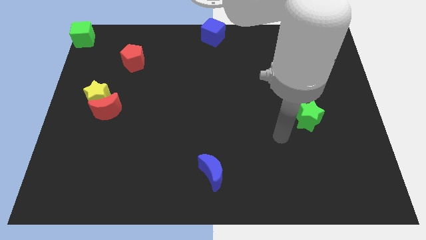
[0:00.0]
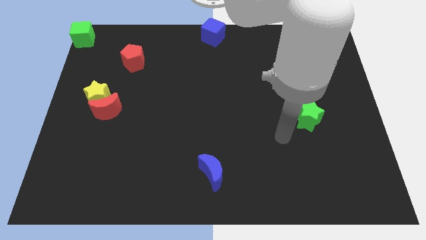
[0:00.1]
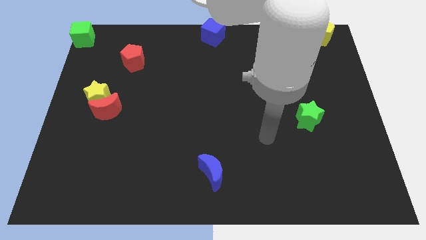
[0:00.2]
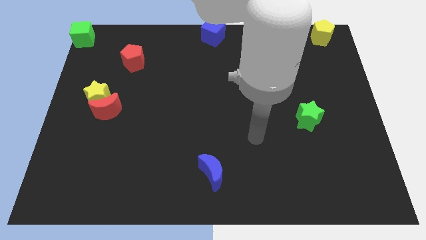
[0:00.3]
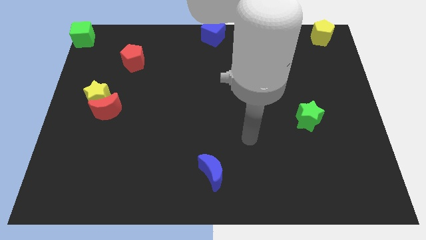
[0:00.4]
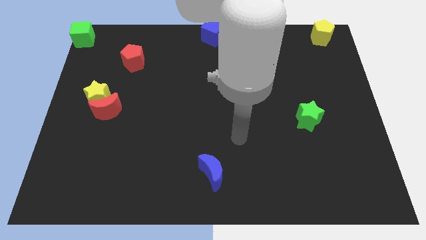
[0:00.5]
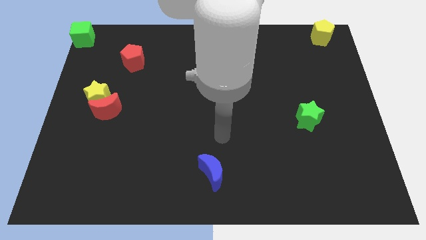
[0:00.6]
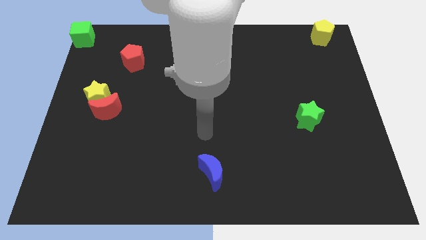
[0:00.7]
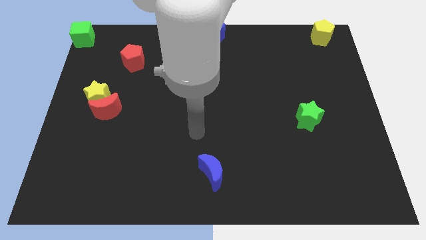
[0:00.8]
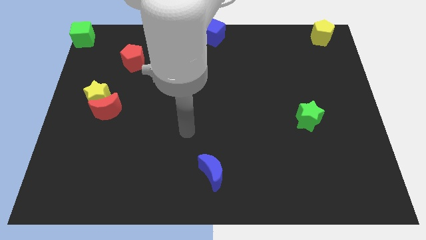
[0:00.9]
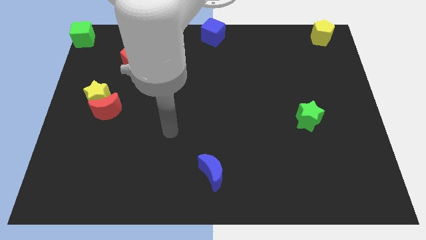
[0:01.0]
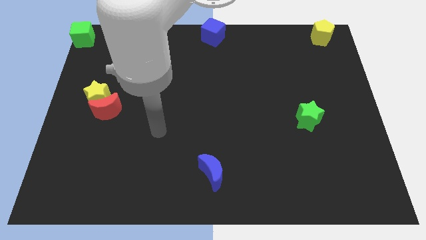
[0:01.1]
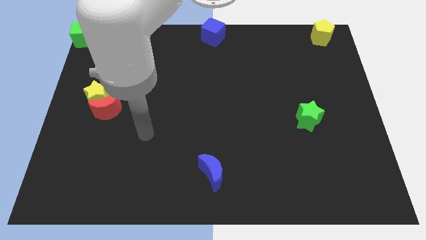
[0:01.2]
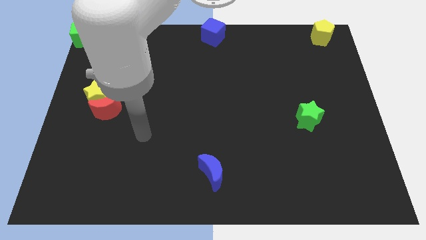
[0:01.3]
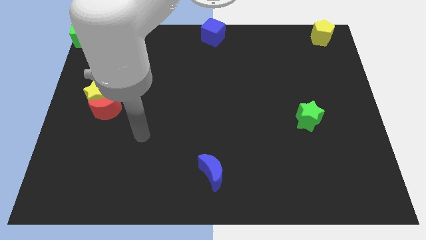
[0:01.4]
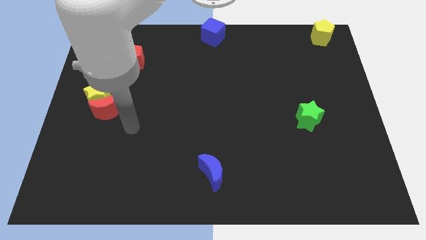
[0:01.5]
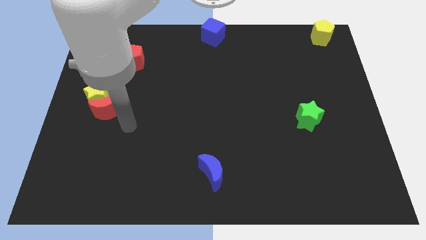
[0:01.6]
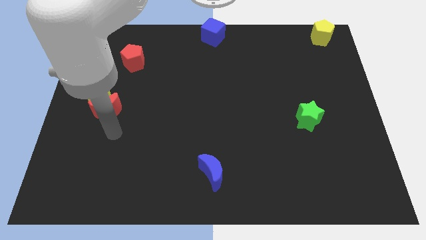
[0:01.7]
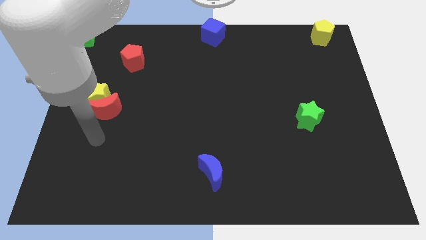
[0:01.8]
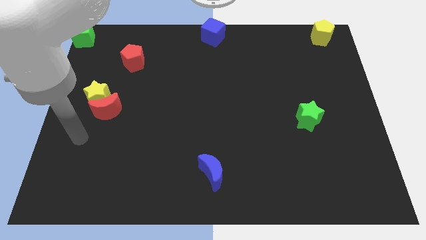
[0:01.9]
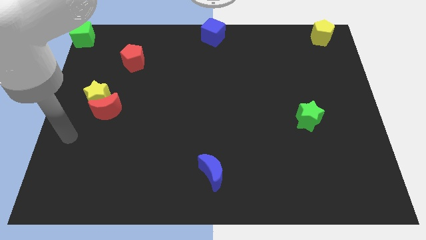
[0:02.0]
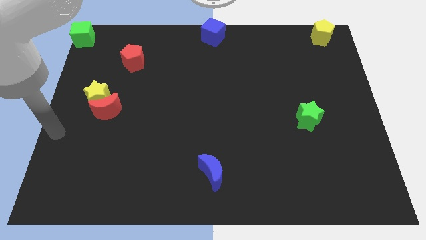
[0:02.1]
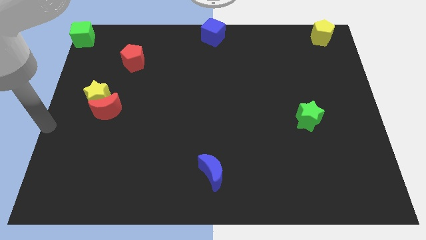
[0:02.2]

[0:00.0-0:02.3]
move your arm away from the green star

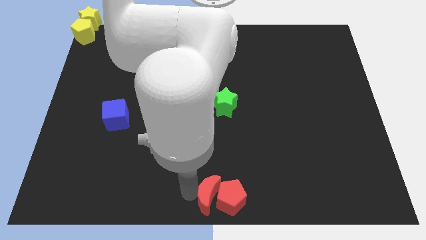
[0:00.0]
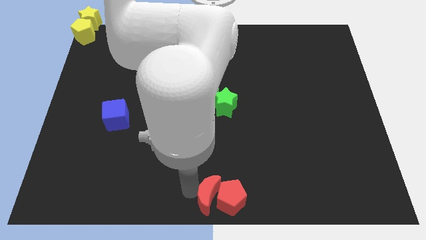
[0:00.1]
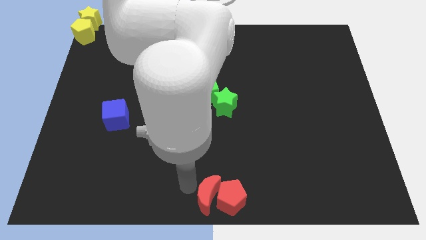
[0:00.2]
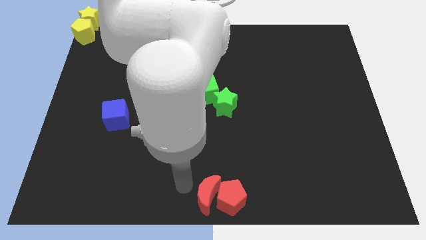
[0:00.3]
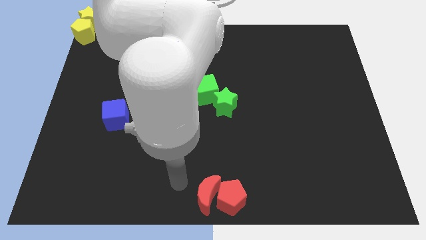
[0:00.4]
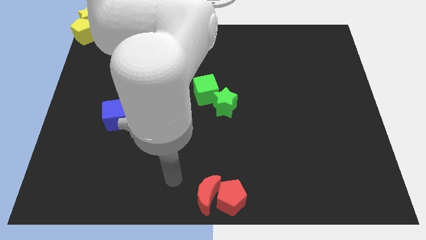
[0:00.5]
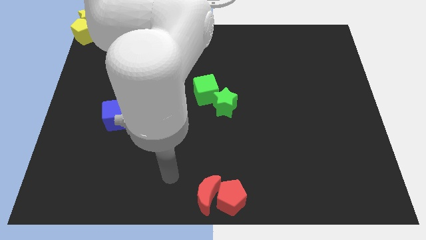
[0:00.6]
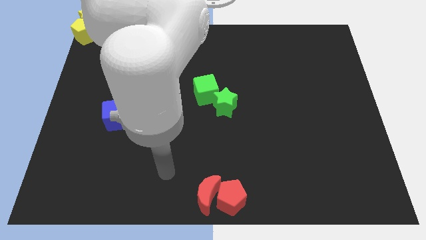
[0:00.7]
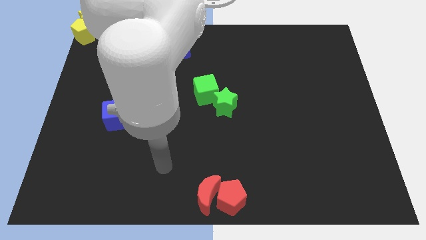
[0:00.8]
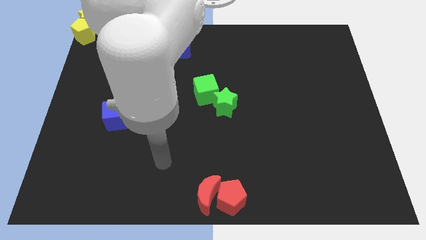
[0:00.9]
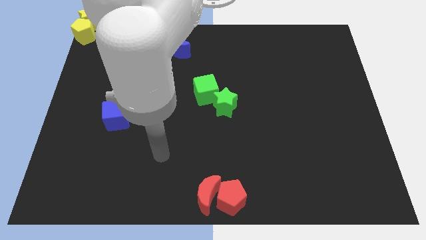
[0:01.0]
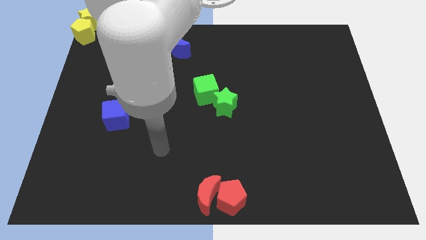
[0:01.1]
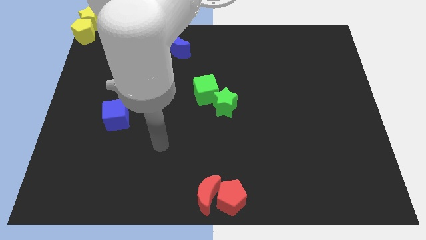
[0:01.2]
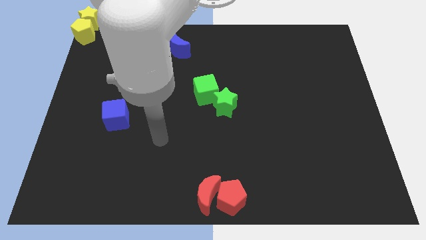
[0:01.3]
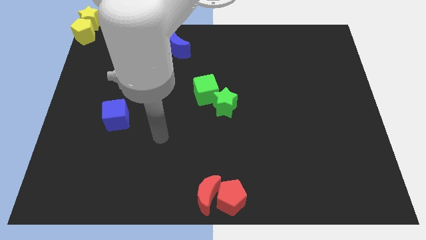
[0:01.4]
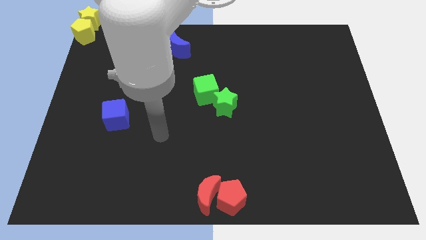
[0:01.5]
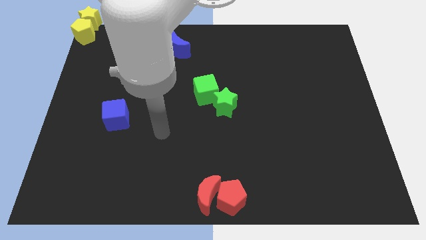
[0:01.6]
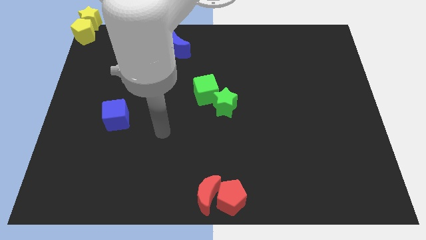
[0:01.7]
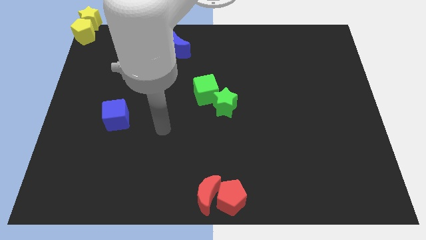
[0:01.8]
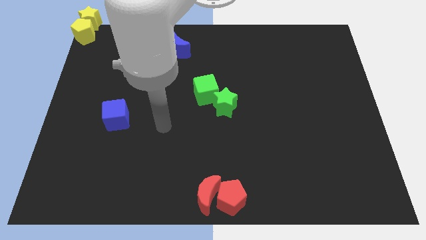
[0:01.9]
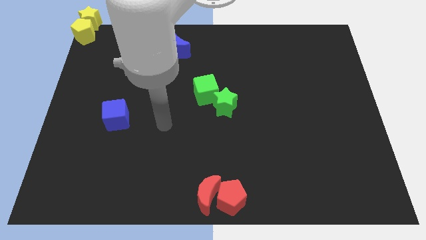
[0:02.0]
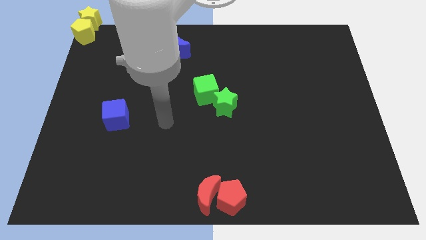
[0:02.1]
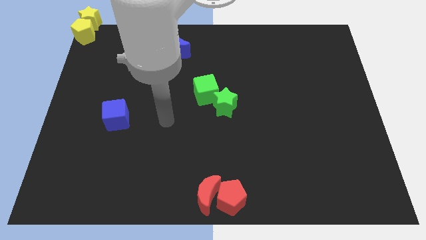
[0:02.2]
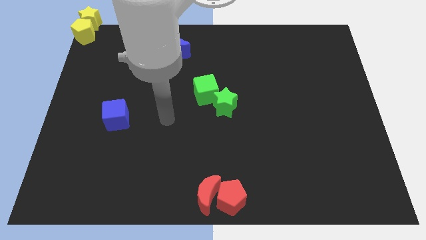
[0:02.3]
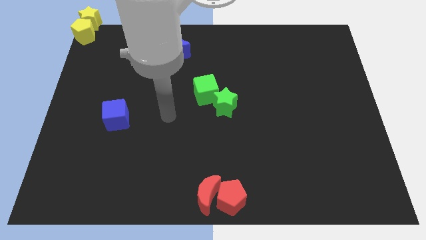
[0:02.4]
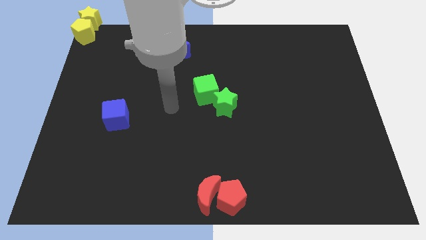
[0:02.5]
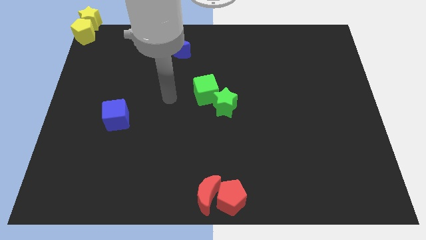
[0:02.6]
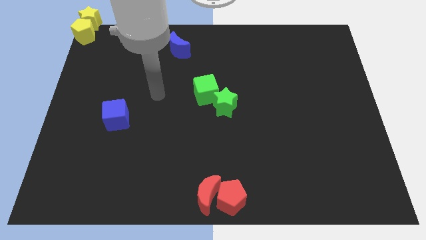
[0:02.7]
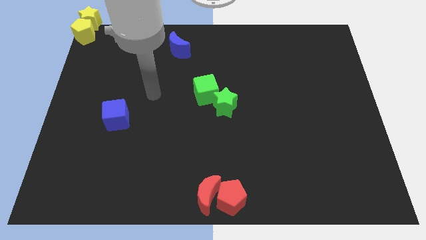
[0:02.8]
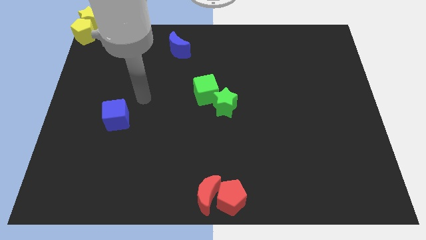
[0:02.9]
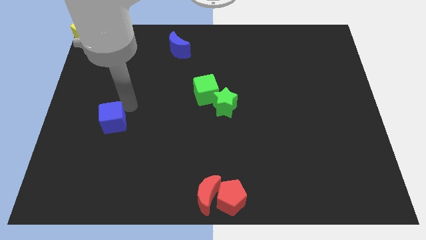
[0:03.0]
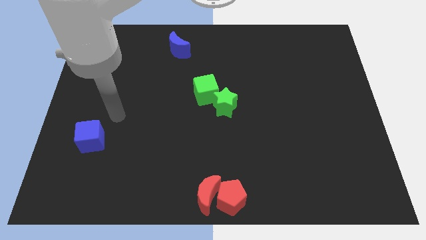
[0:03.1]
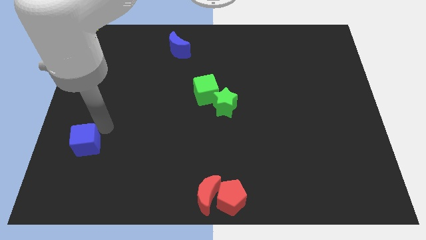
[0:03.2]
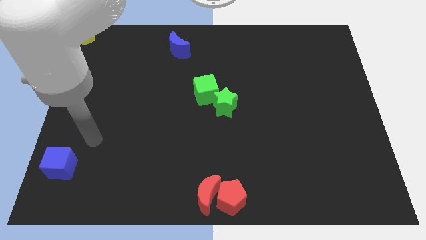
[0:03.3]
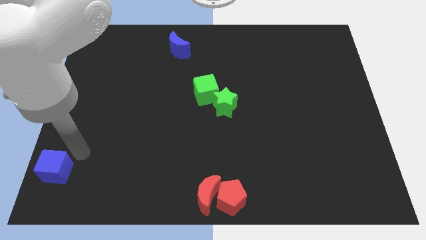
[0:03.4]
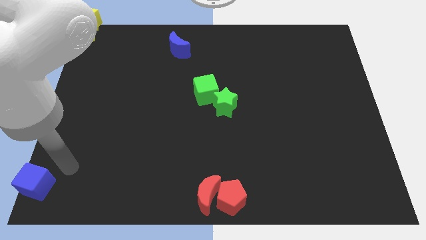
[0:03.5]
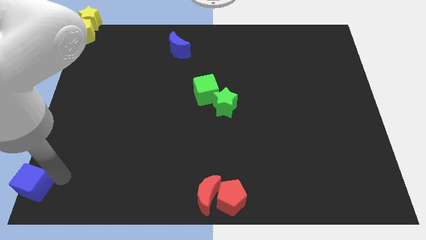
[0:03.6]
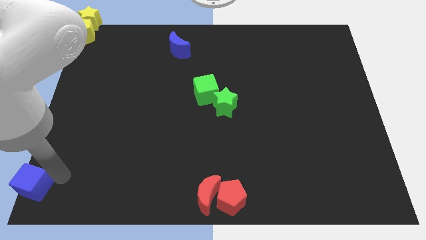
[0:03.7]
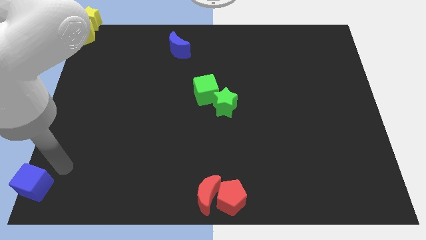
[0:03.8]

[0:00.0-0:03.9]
push the blue cube to the bottom left to the board

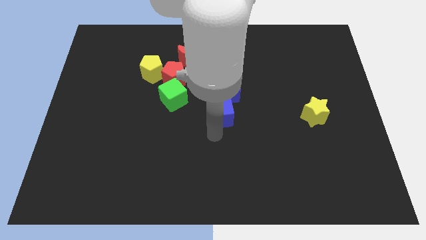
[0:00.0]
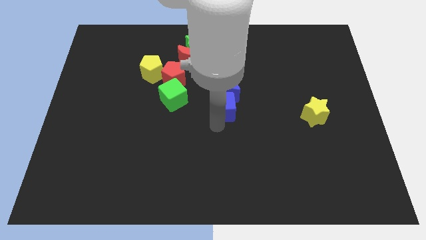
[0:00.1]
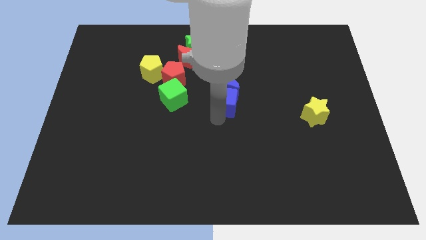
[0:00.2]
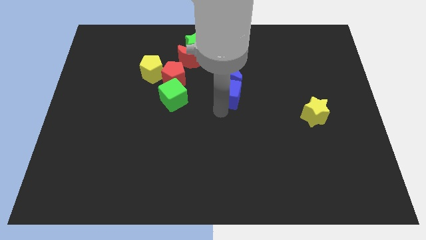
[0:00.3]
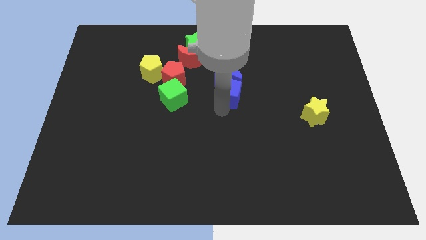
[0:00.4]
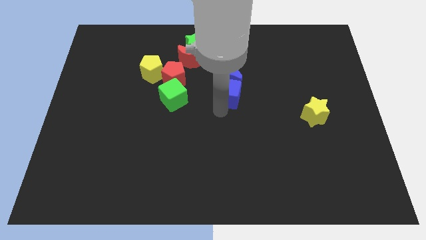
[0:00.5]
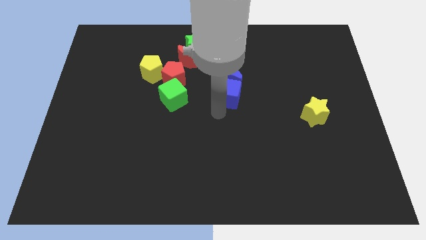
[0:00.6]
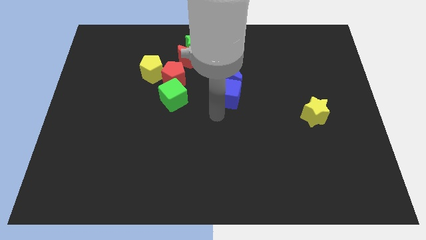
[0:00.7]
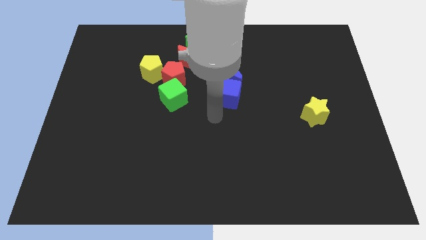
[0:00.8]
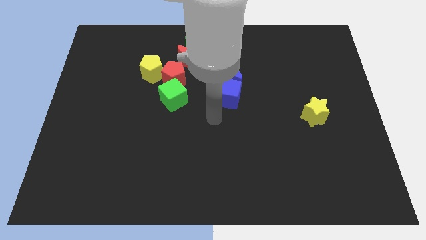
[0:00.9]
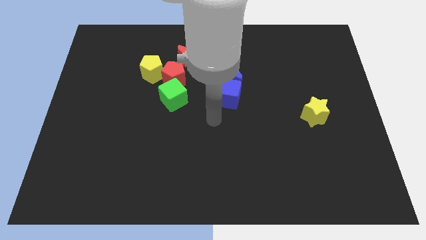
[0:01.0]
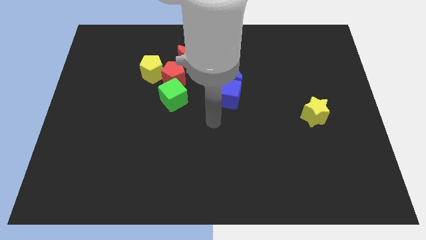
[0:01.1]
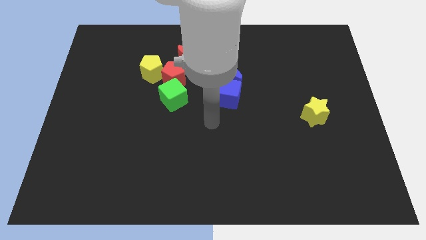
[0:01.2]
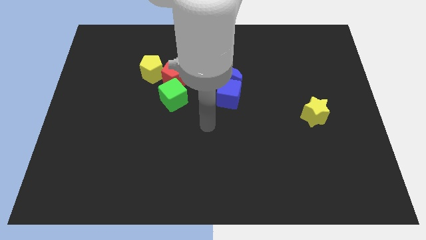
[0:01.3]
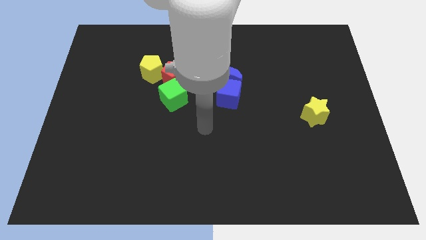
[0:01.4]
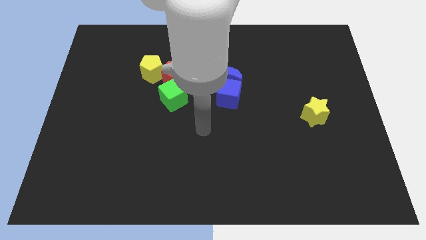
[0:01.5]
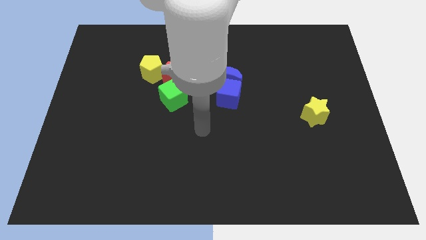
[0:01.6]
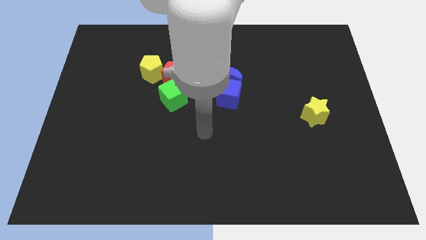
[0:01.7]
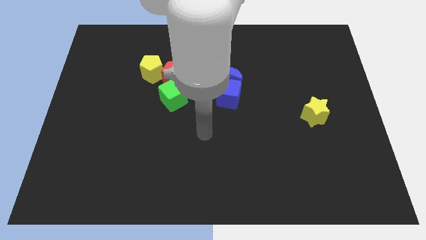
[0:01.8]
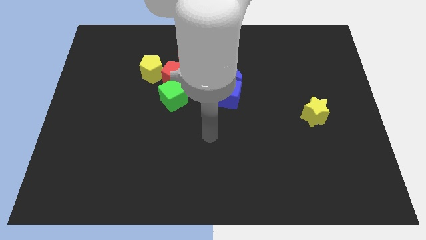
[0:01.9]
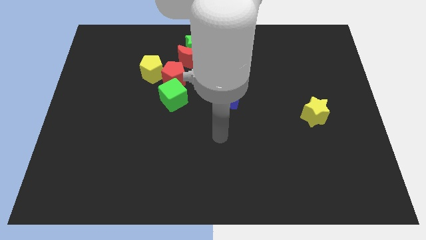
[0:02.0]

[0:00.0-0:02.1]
move your arm to the bottom of the blue cube

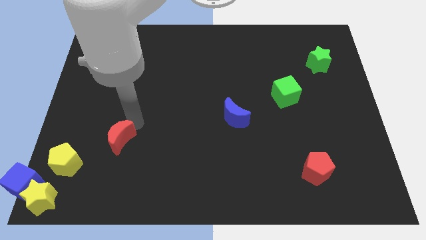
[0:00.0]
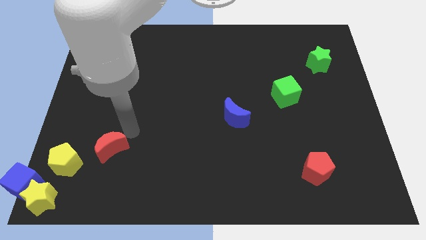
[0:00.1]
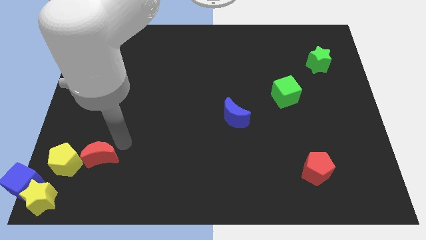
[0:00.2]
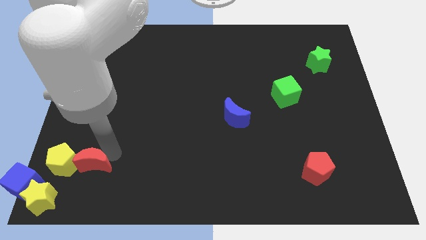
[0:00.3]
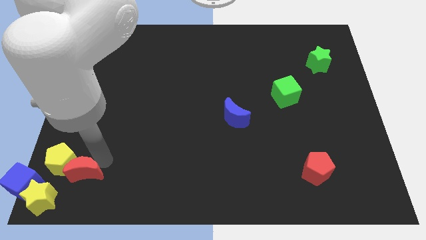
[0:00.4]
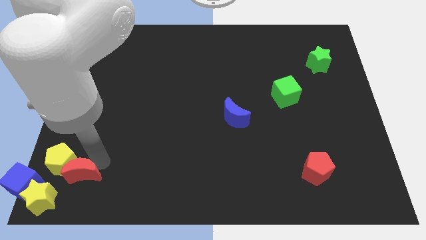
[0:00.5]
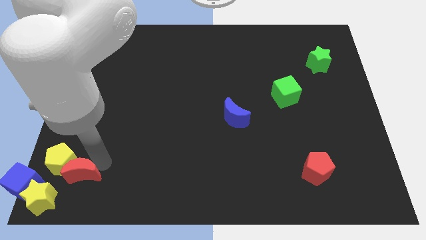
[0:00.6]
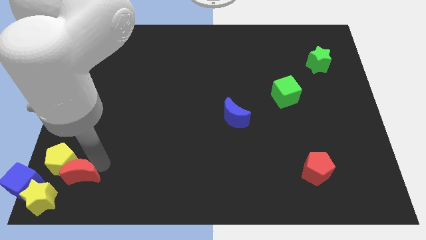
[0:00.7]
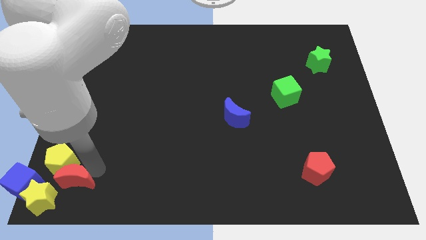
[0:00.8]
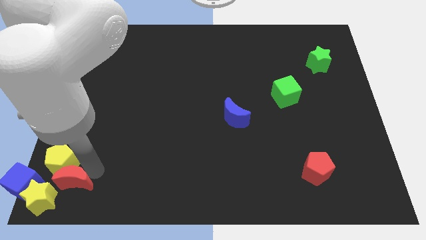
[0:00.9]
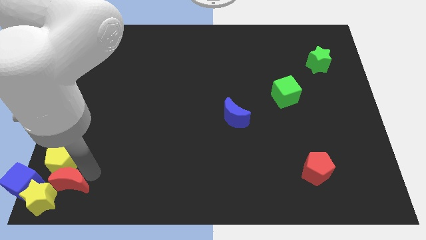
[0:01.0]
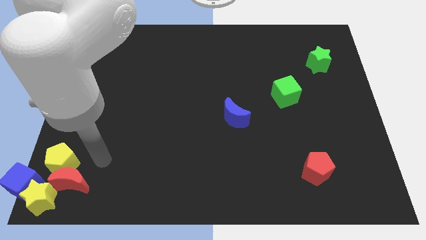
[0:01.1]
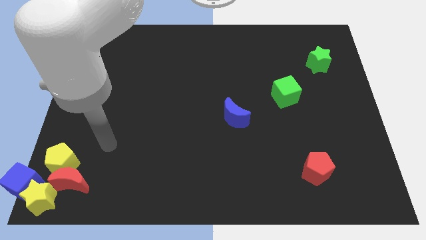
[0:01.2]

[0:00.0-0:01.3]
push red moon towards yellow star
